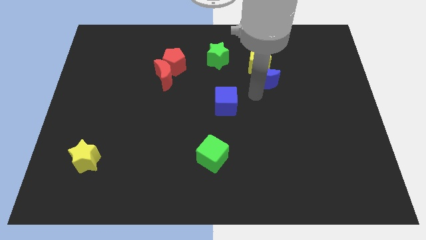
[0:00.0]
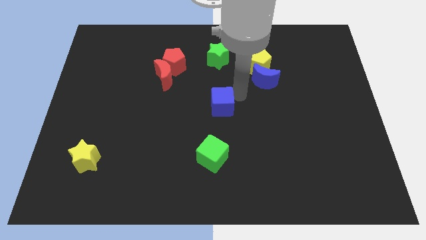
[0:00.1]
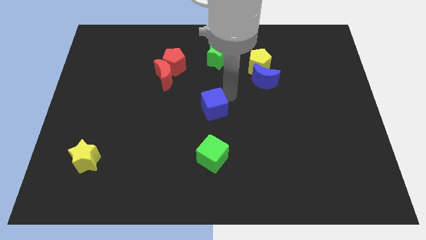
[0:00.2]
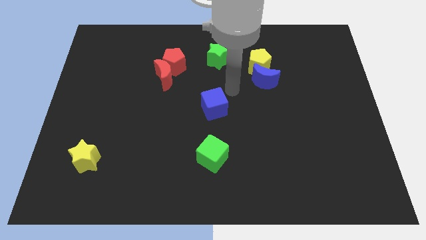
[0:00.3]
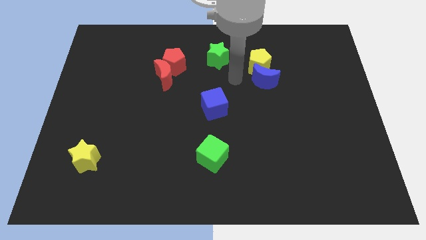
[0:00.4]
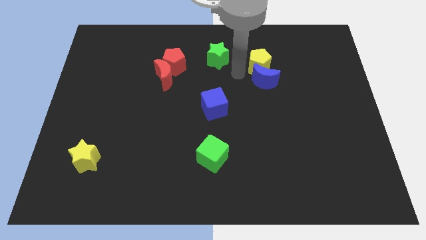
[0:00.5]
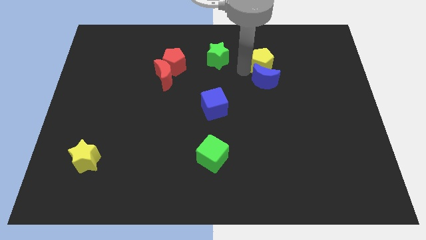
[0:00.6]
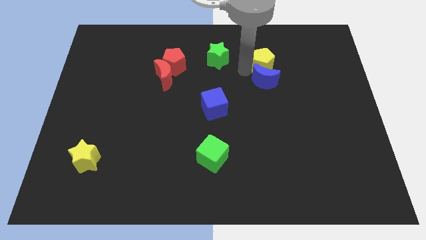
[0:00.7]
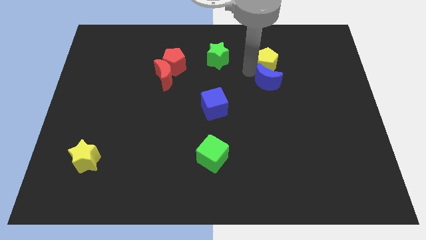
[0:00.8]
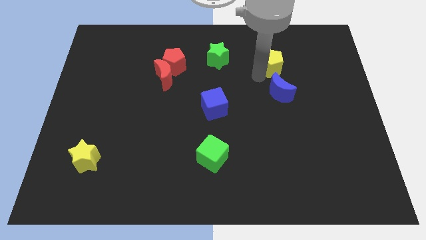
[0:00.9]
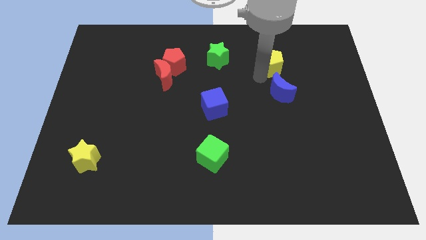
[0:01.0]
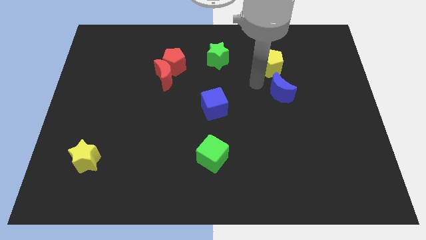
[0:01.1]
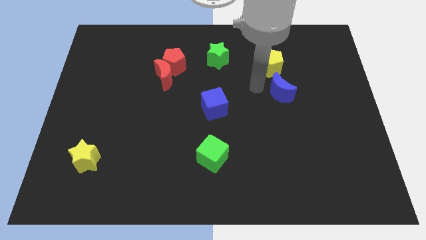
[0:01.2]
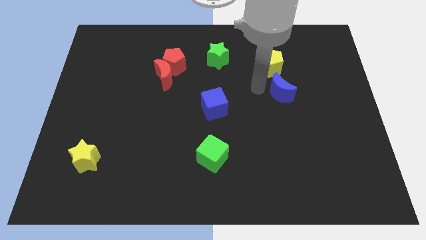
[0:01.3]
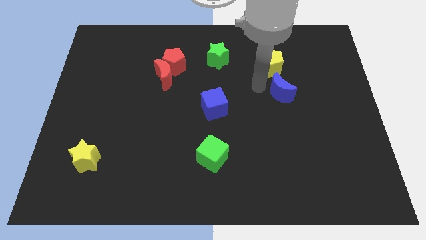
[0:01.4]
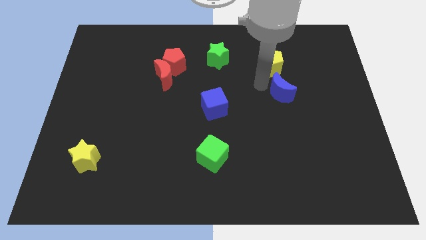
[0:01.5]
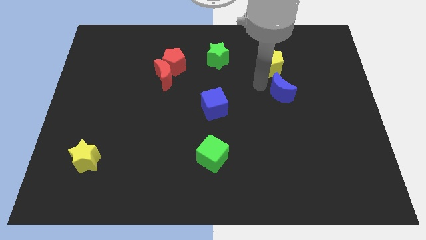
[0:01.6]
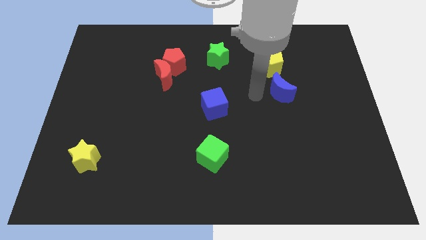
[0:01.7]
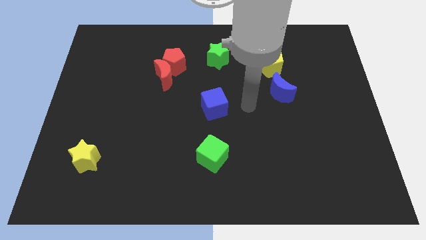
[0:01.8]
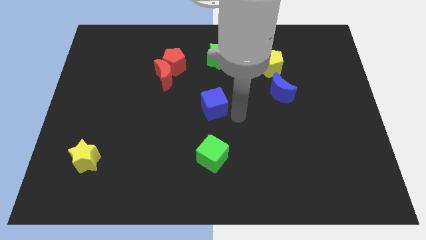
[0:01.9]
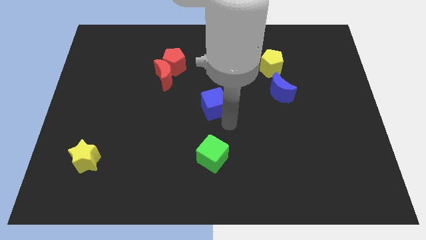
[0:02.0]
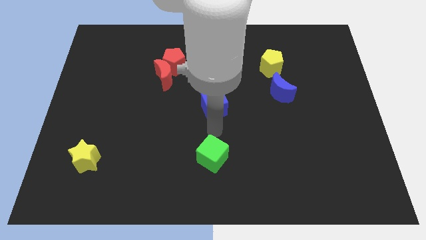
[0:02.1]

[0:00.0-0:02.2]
place the arm above the green cube

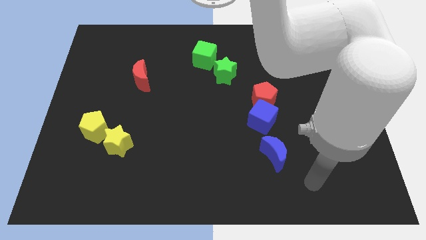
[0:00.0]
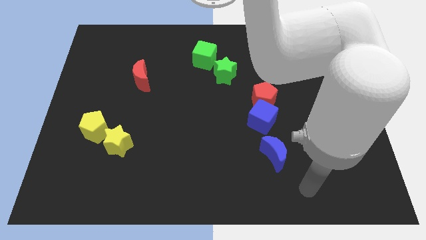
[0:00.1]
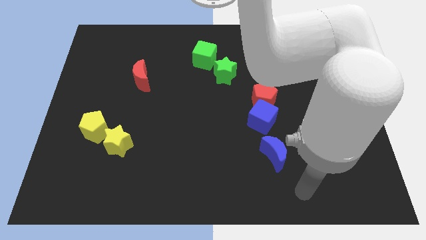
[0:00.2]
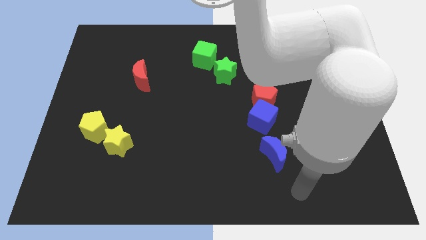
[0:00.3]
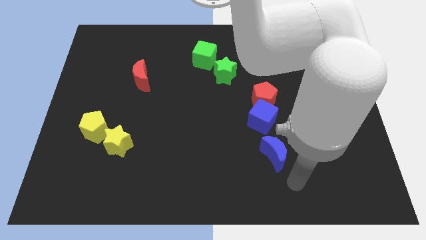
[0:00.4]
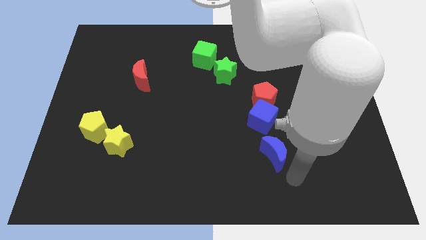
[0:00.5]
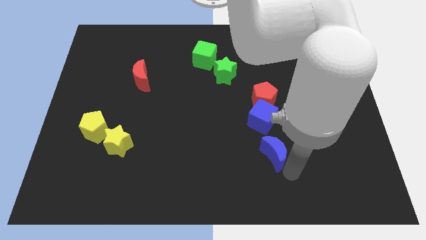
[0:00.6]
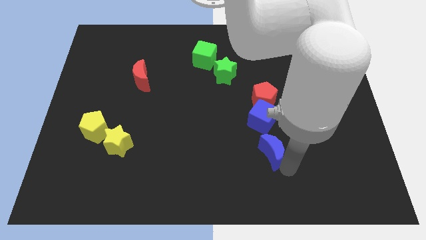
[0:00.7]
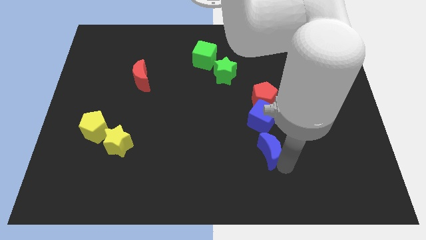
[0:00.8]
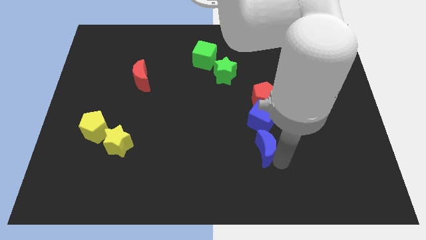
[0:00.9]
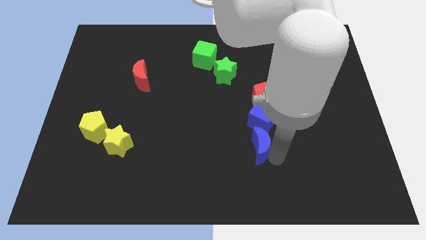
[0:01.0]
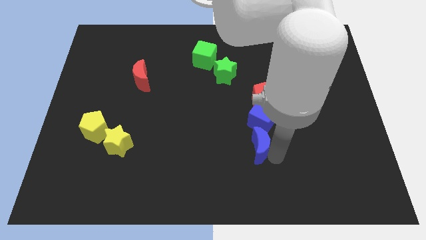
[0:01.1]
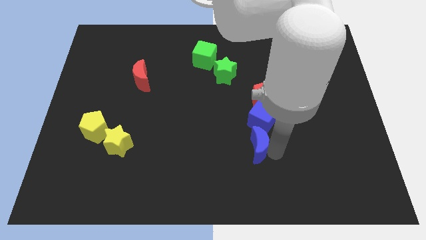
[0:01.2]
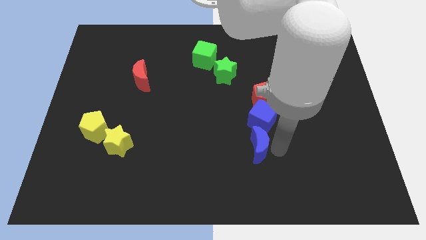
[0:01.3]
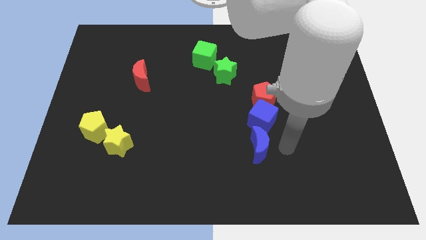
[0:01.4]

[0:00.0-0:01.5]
place the blue crescent underneath the blue cube

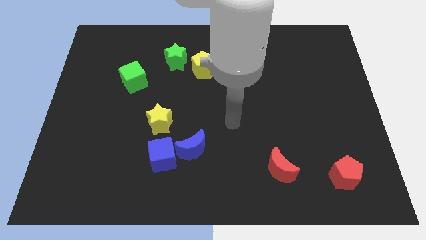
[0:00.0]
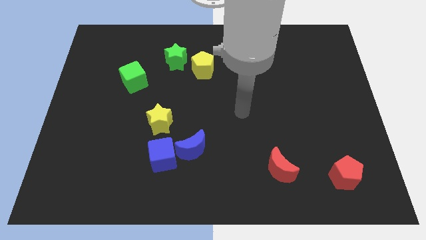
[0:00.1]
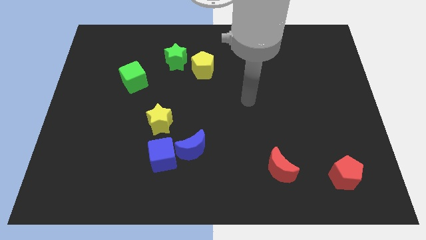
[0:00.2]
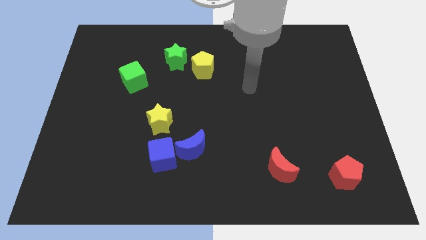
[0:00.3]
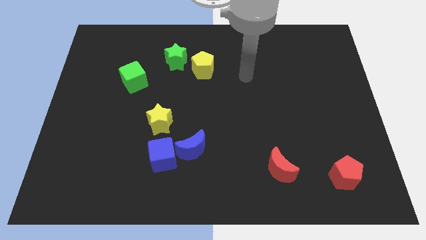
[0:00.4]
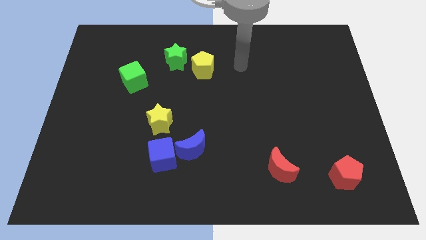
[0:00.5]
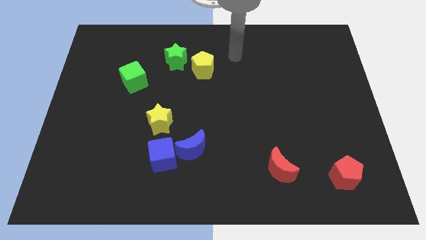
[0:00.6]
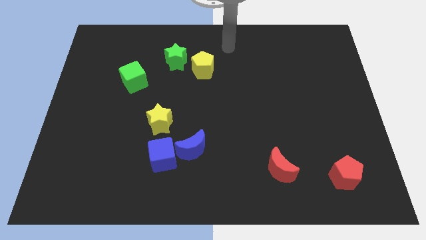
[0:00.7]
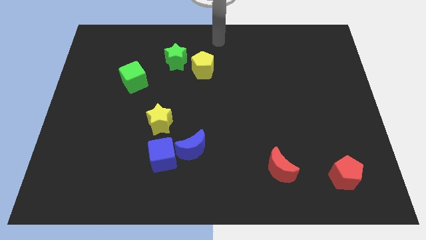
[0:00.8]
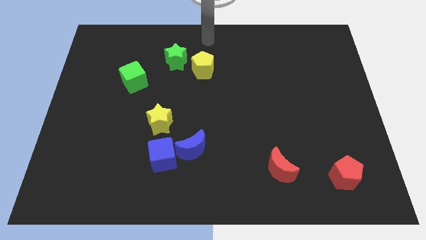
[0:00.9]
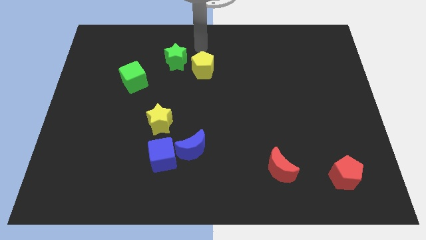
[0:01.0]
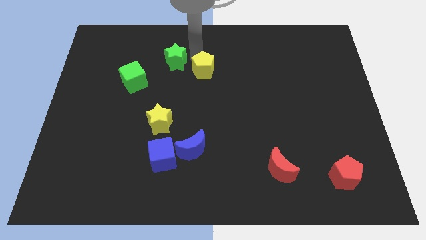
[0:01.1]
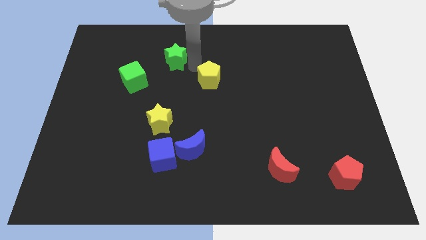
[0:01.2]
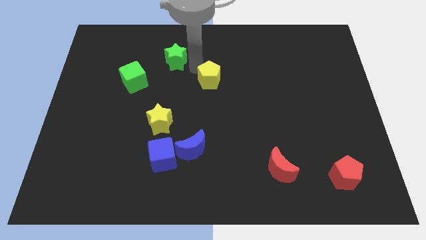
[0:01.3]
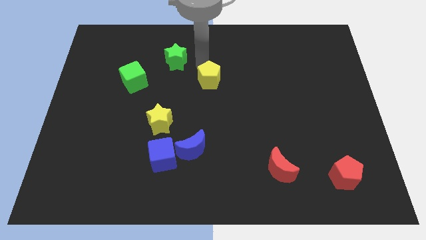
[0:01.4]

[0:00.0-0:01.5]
slightly push the yellow pentagon to the down

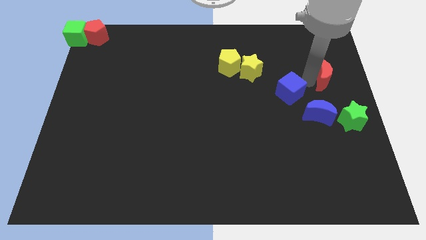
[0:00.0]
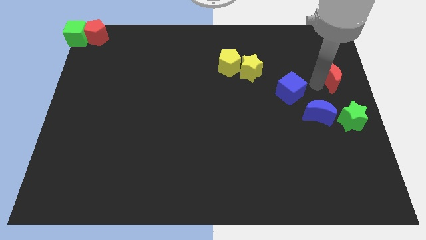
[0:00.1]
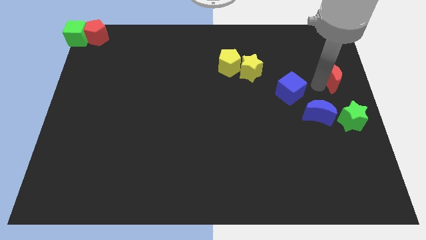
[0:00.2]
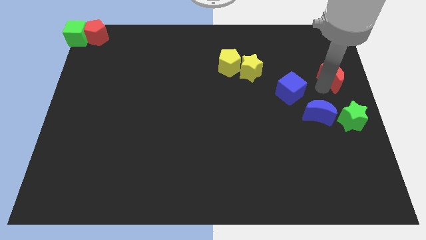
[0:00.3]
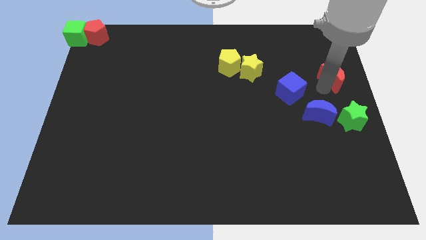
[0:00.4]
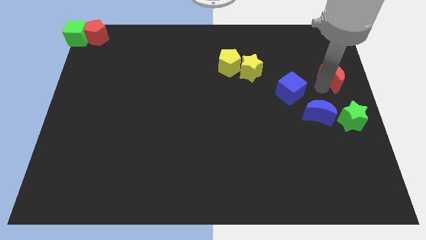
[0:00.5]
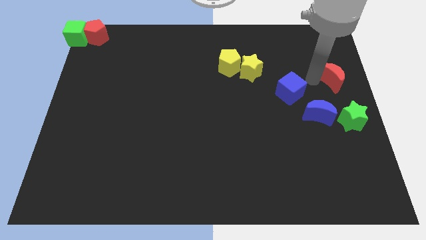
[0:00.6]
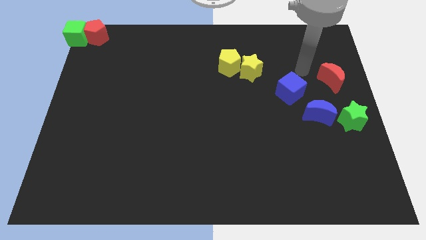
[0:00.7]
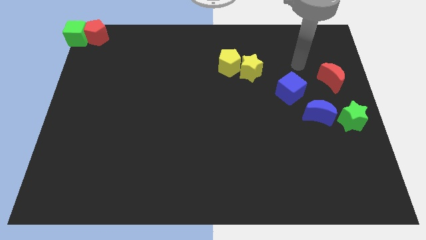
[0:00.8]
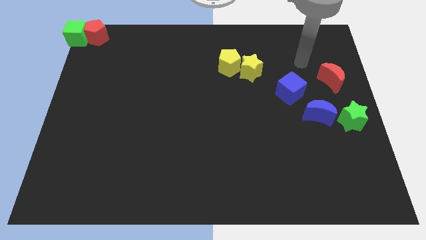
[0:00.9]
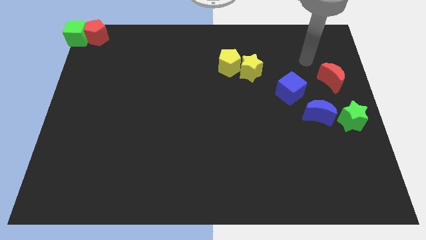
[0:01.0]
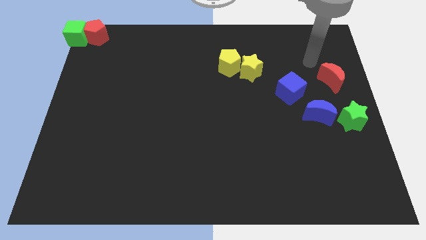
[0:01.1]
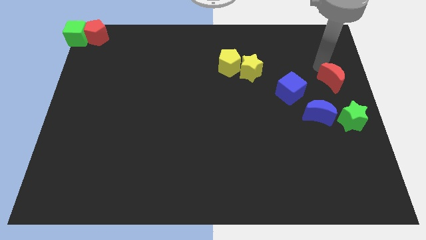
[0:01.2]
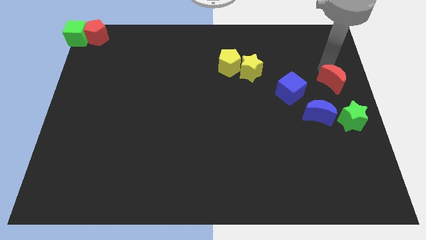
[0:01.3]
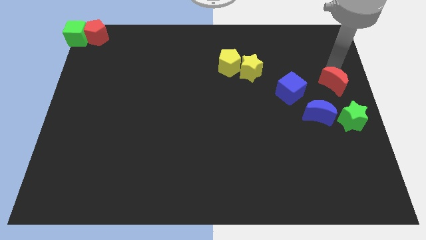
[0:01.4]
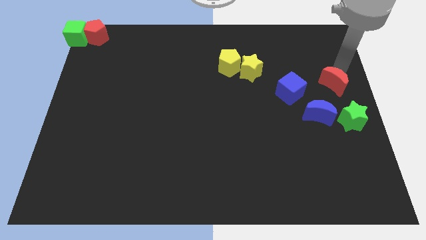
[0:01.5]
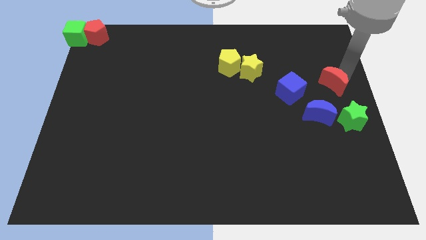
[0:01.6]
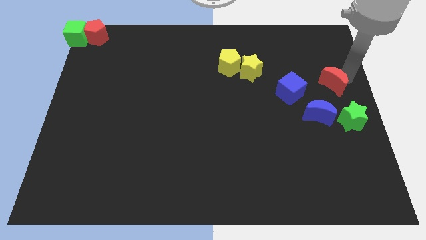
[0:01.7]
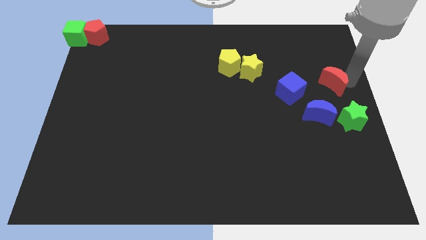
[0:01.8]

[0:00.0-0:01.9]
push red moon diagonally to the top left of the green star

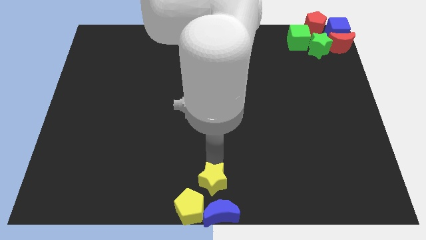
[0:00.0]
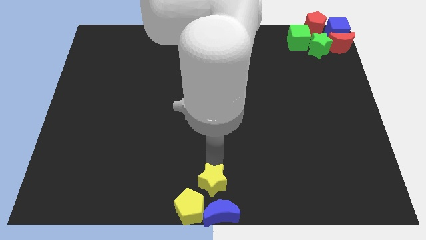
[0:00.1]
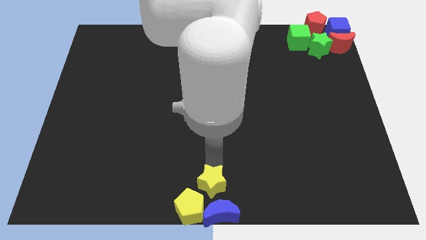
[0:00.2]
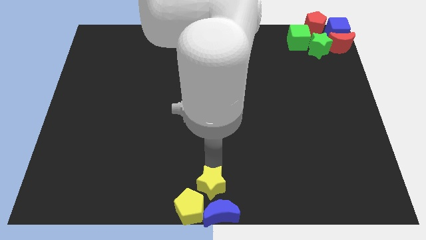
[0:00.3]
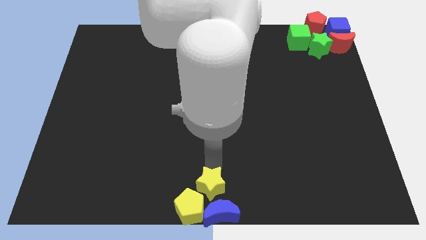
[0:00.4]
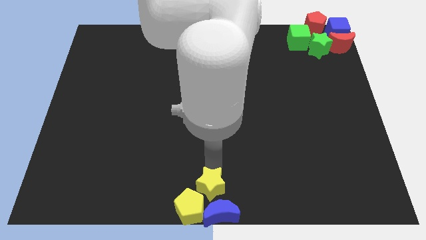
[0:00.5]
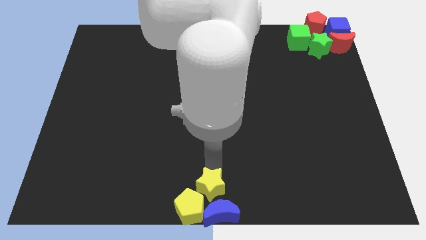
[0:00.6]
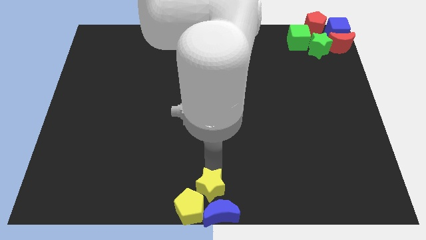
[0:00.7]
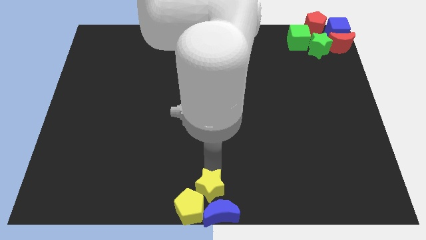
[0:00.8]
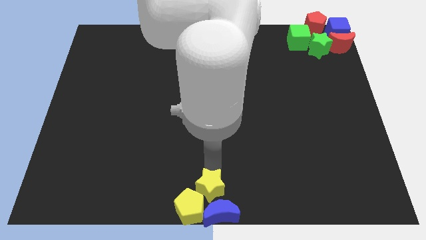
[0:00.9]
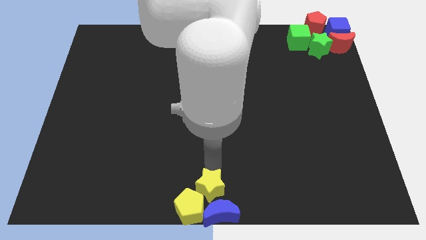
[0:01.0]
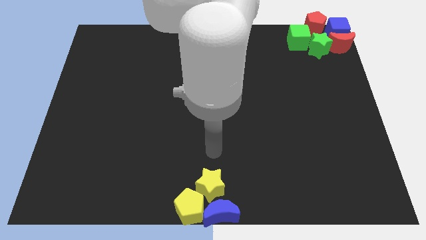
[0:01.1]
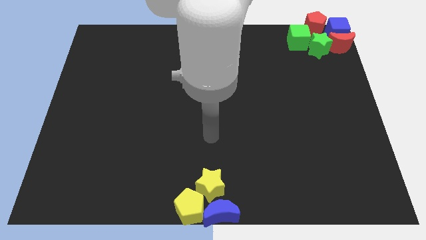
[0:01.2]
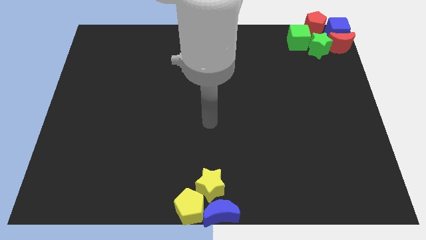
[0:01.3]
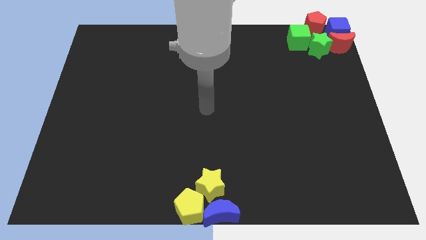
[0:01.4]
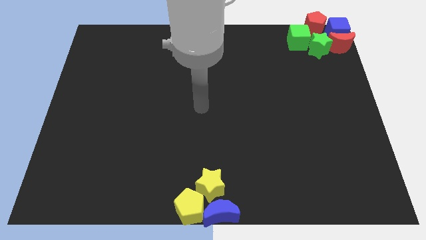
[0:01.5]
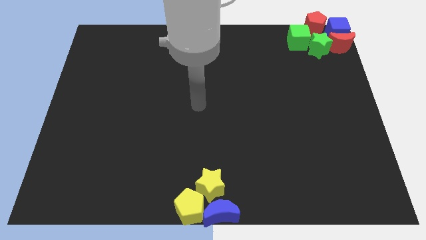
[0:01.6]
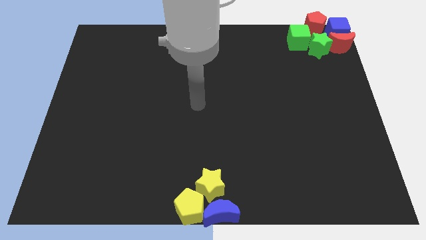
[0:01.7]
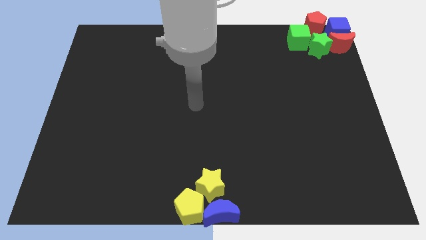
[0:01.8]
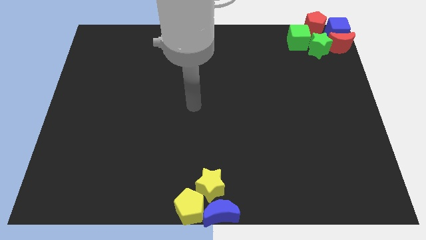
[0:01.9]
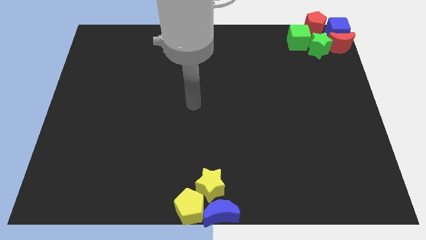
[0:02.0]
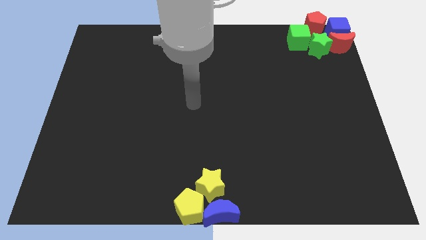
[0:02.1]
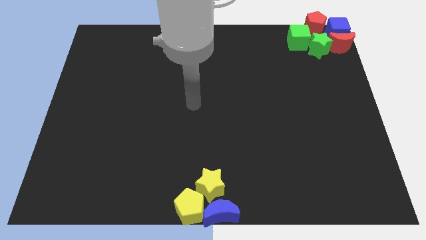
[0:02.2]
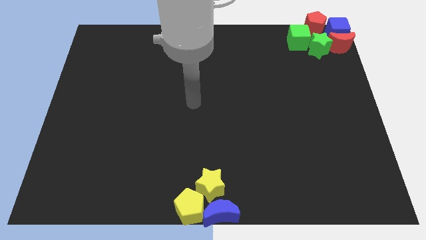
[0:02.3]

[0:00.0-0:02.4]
move the yellow star right above the yellow pentagon
